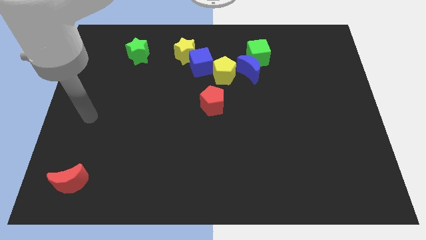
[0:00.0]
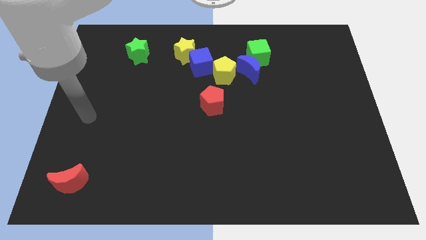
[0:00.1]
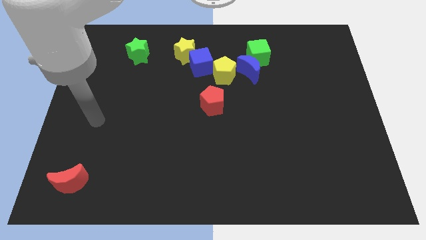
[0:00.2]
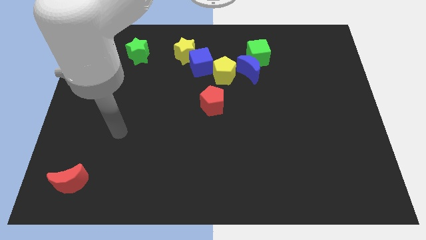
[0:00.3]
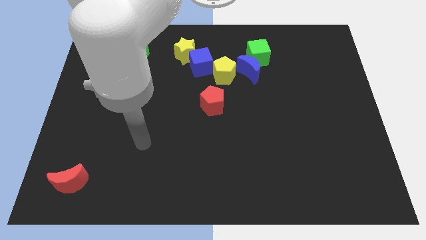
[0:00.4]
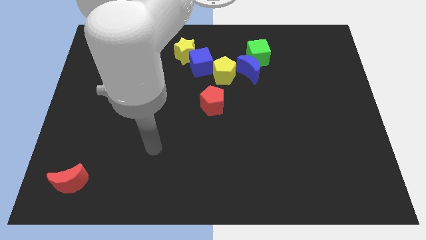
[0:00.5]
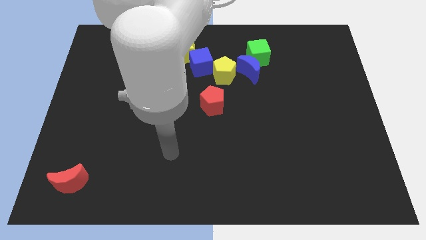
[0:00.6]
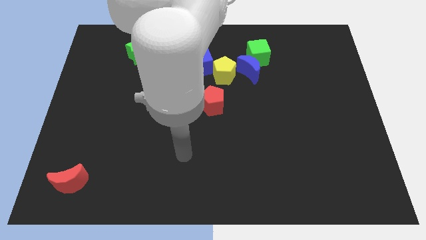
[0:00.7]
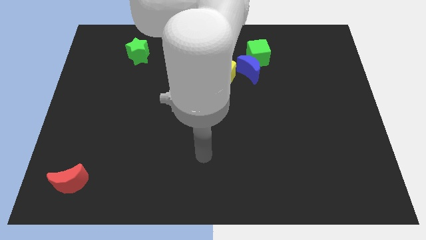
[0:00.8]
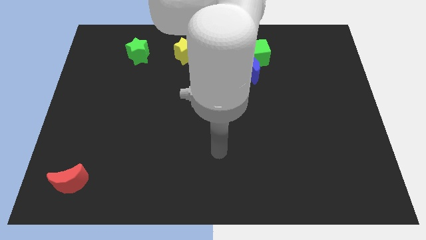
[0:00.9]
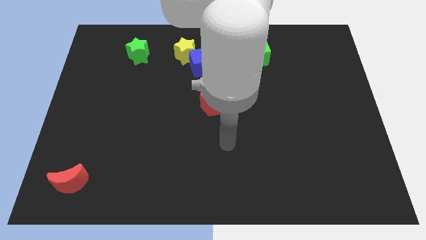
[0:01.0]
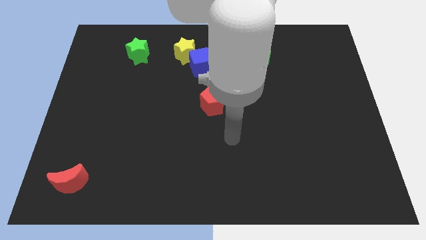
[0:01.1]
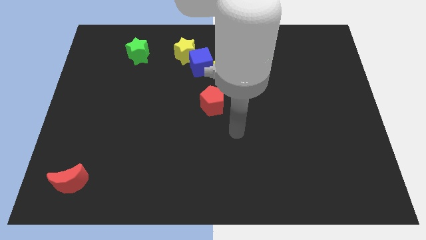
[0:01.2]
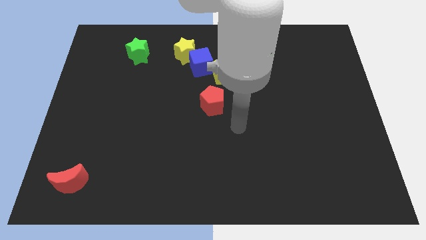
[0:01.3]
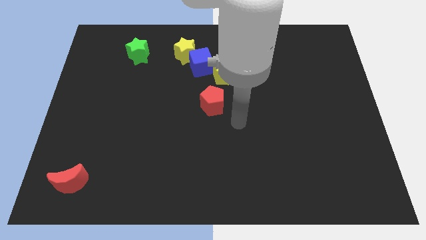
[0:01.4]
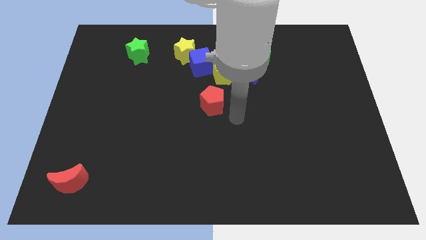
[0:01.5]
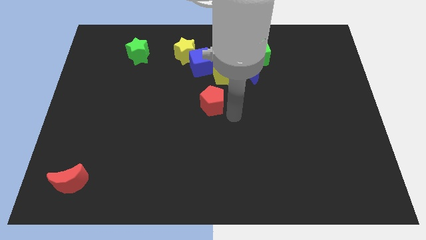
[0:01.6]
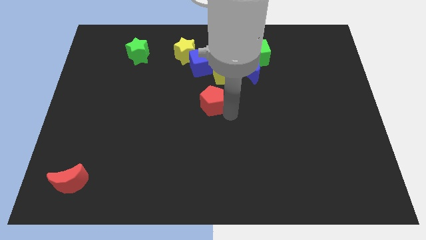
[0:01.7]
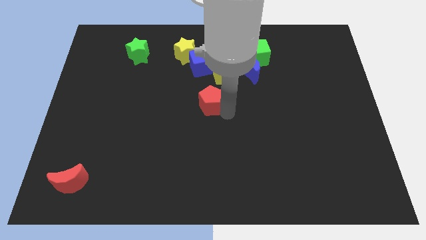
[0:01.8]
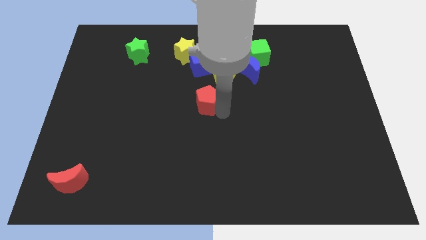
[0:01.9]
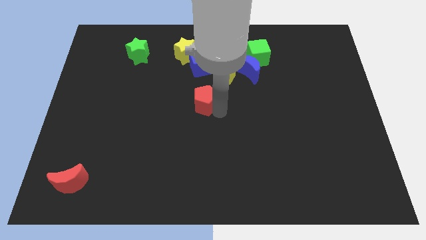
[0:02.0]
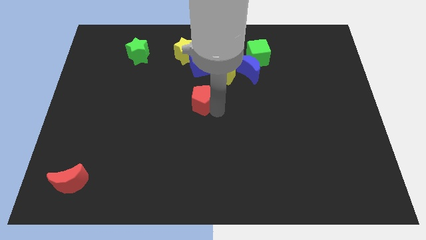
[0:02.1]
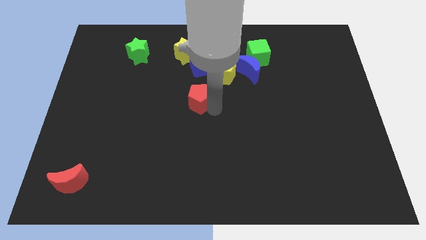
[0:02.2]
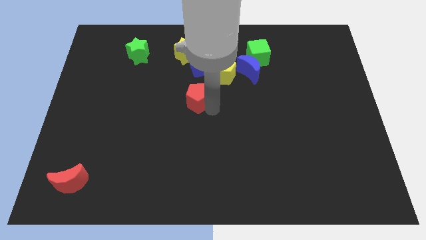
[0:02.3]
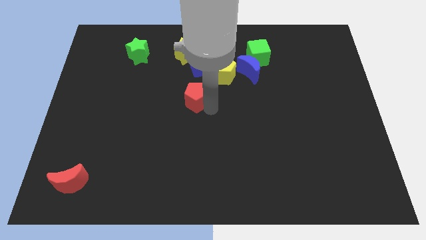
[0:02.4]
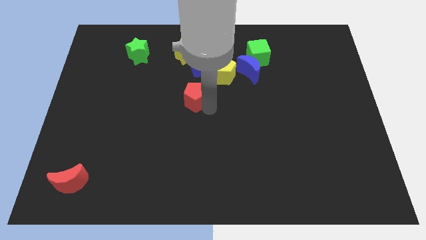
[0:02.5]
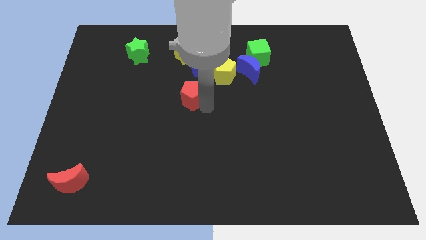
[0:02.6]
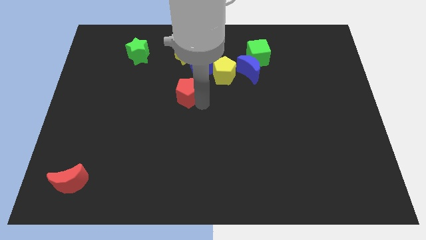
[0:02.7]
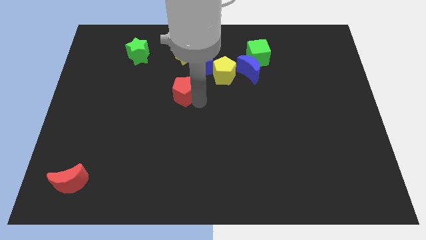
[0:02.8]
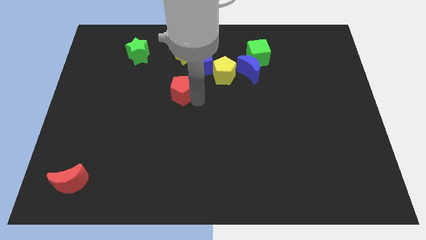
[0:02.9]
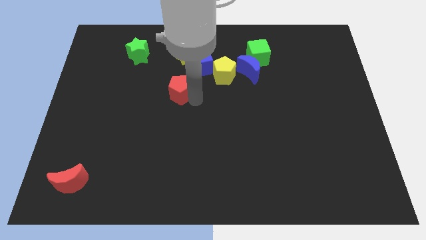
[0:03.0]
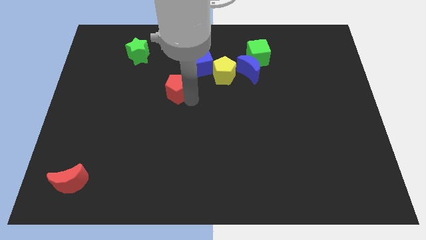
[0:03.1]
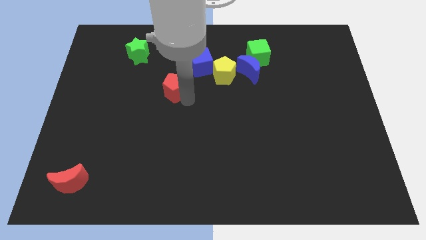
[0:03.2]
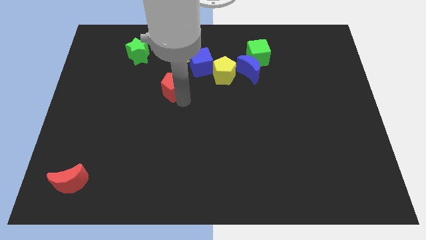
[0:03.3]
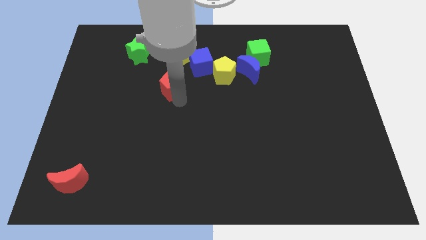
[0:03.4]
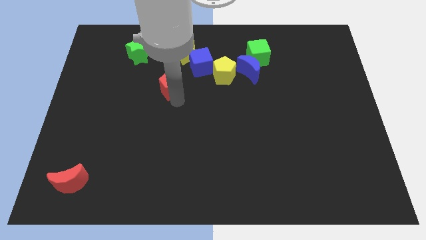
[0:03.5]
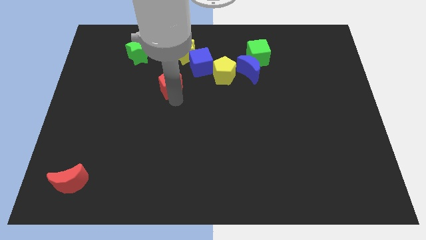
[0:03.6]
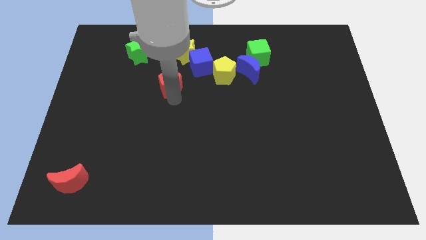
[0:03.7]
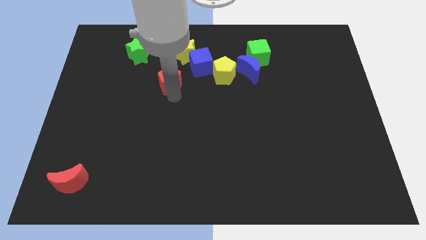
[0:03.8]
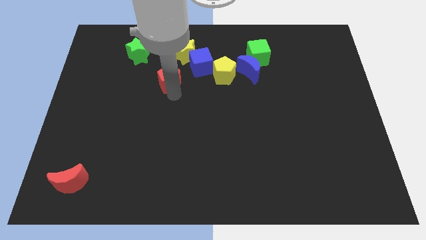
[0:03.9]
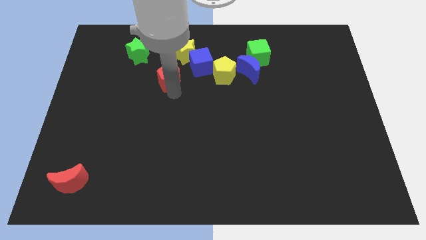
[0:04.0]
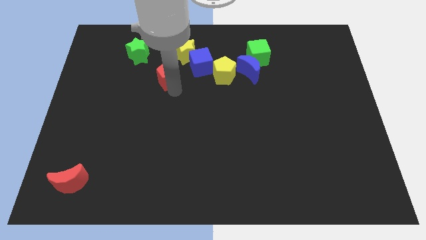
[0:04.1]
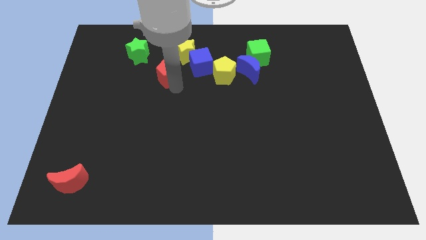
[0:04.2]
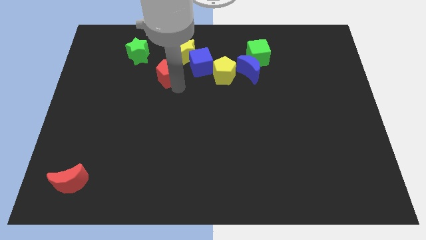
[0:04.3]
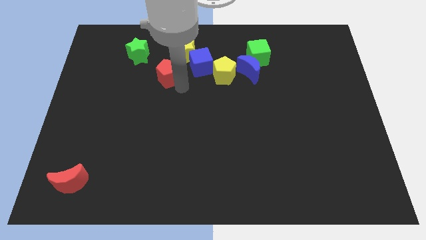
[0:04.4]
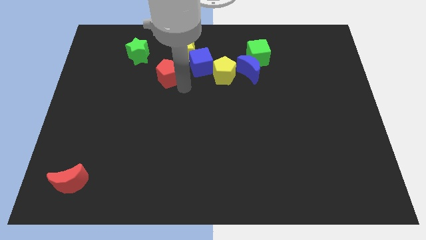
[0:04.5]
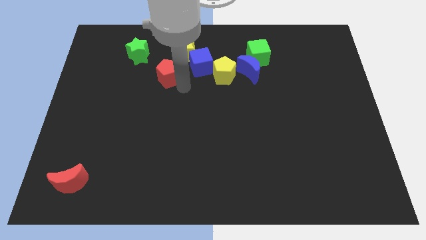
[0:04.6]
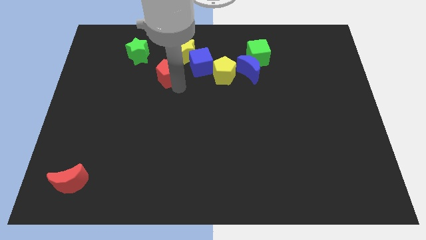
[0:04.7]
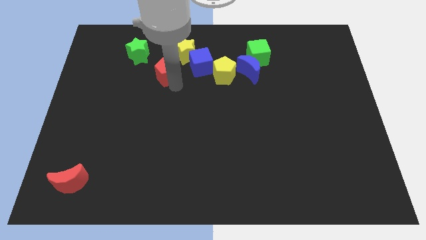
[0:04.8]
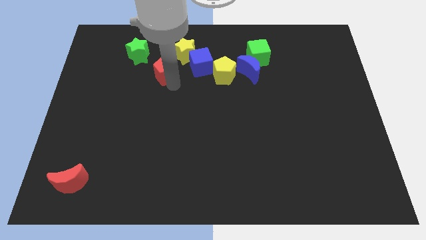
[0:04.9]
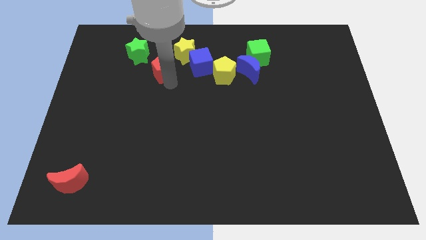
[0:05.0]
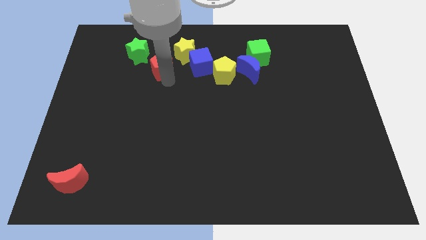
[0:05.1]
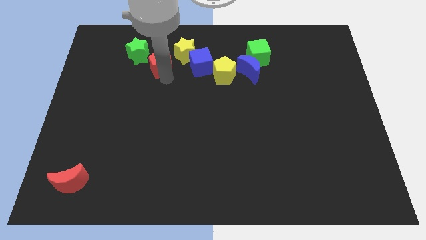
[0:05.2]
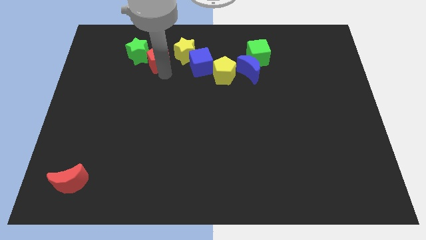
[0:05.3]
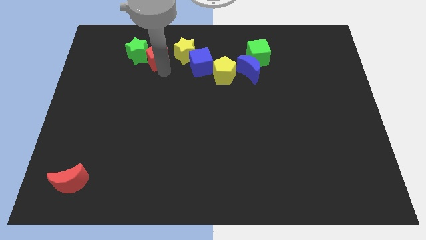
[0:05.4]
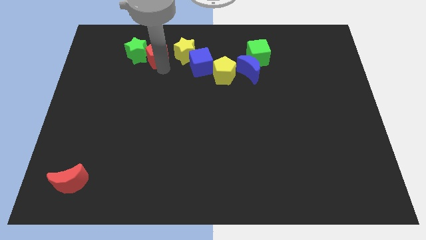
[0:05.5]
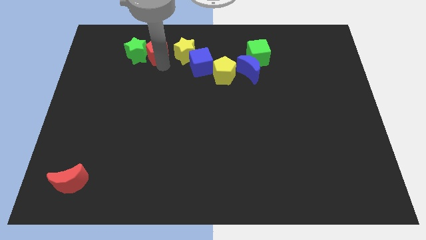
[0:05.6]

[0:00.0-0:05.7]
push the red pentagon to the green star

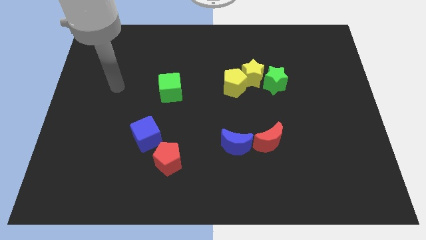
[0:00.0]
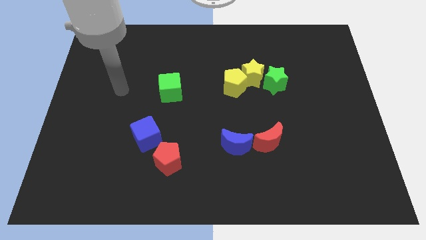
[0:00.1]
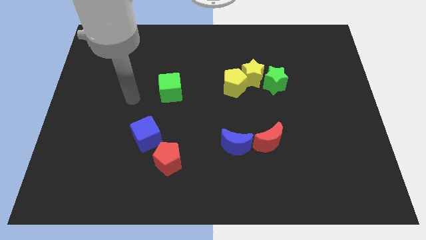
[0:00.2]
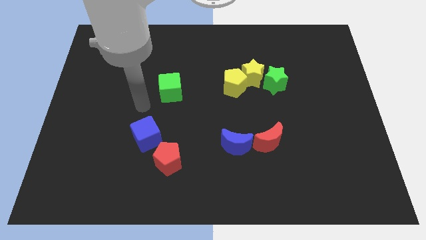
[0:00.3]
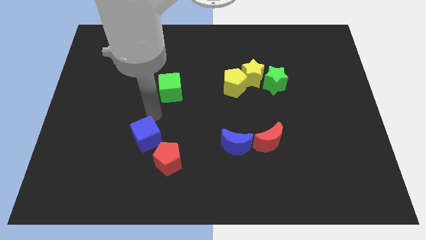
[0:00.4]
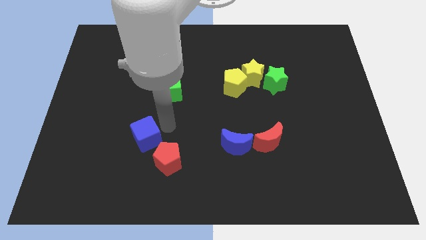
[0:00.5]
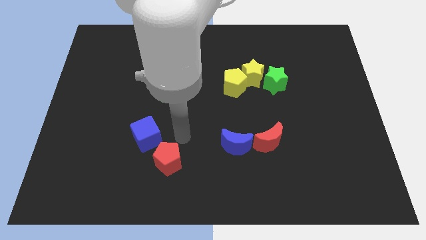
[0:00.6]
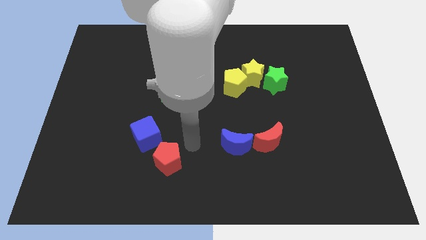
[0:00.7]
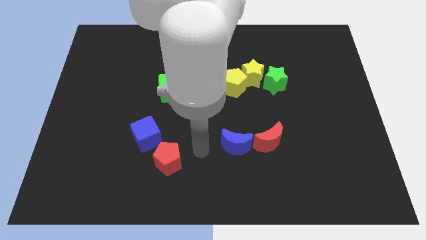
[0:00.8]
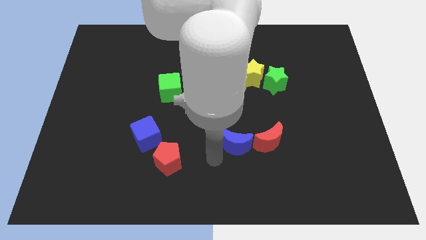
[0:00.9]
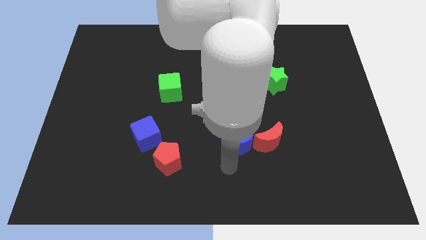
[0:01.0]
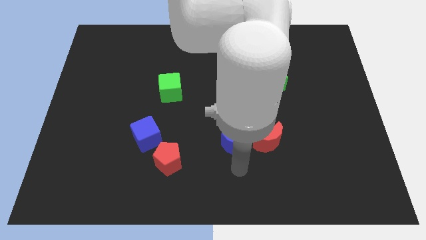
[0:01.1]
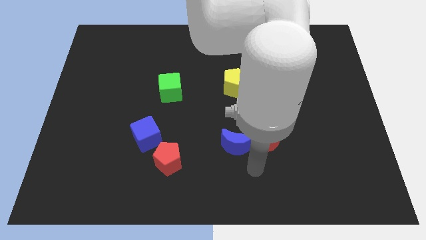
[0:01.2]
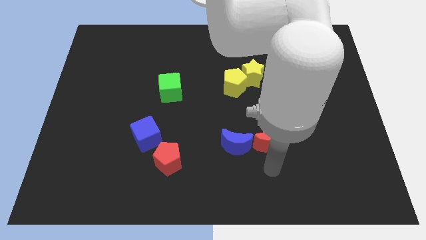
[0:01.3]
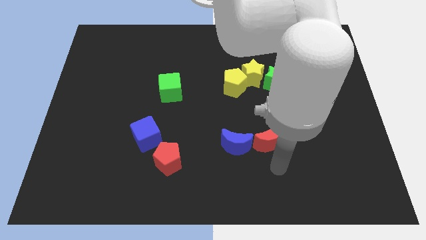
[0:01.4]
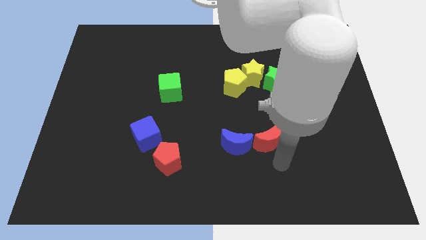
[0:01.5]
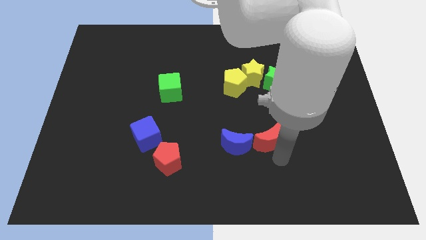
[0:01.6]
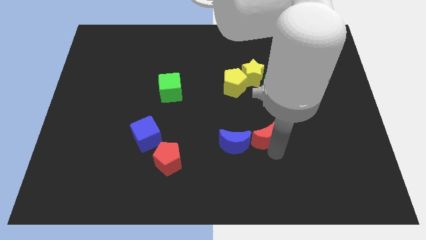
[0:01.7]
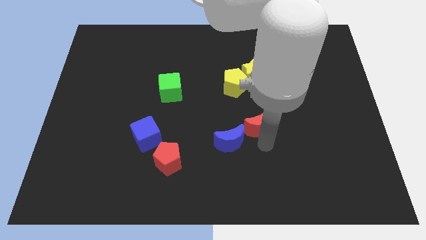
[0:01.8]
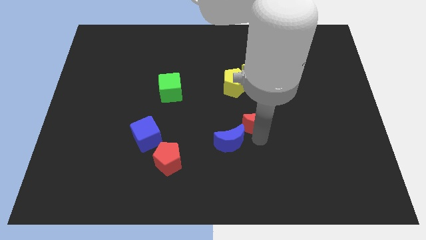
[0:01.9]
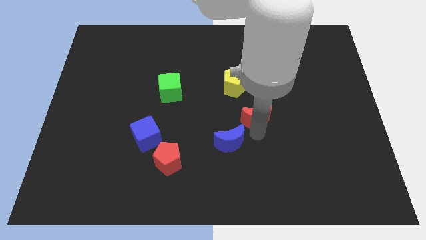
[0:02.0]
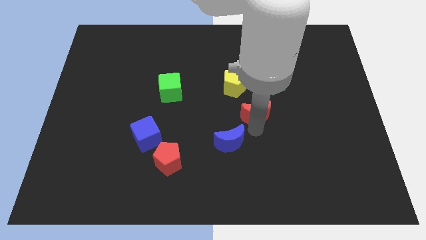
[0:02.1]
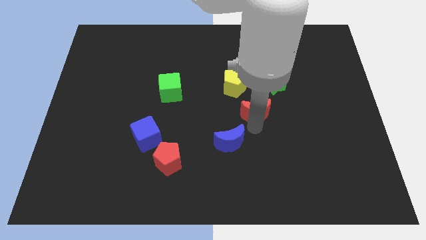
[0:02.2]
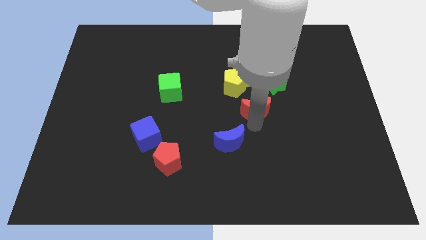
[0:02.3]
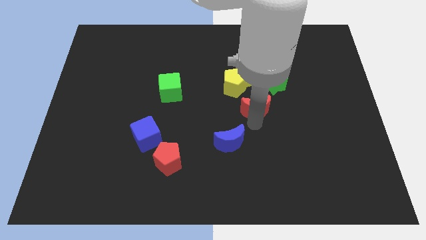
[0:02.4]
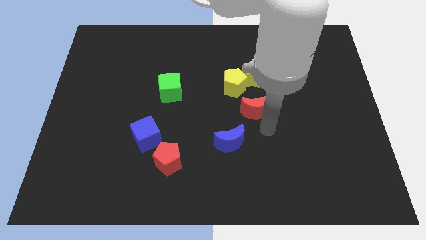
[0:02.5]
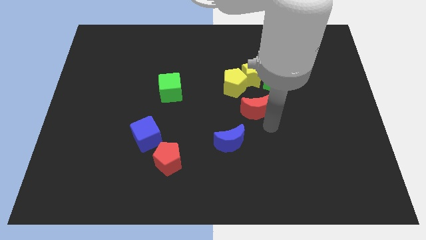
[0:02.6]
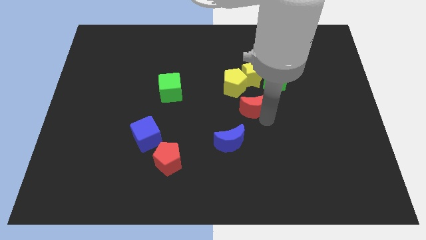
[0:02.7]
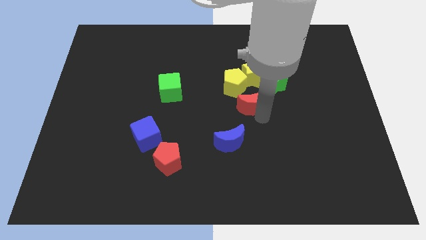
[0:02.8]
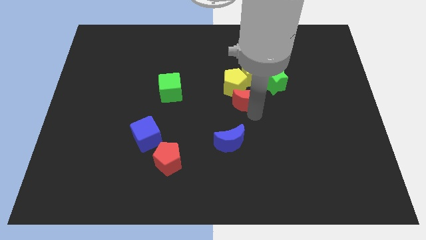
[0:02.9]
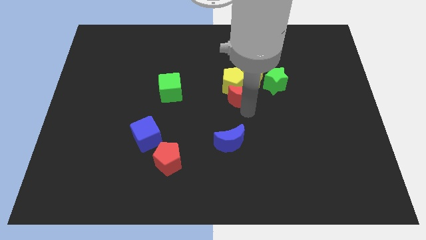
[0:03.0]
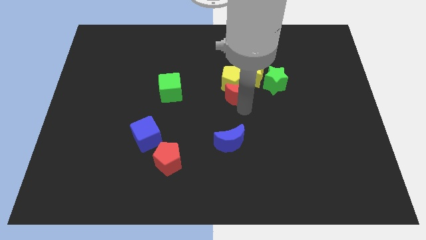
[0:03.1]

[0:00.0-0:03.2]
put the red moon to the yellow pentagon
